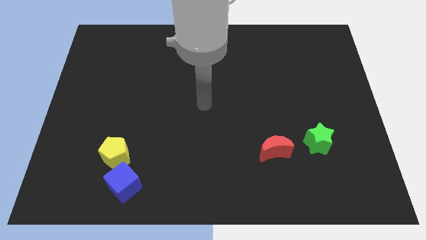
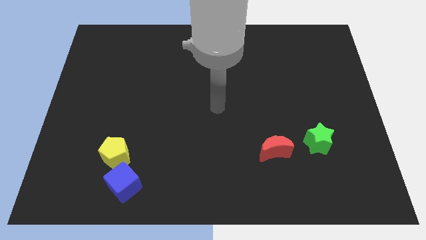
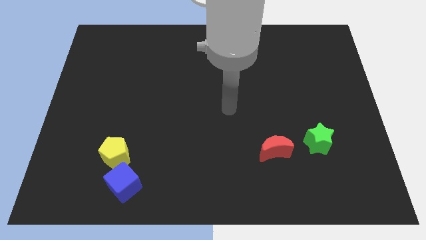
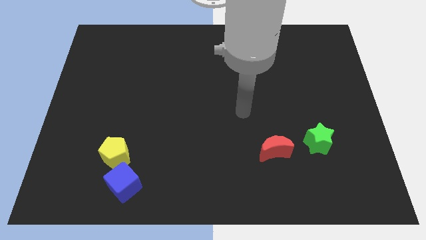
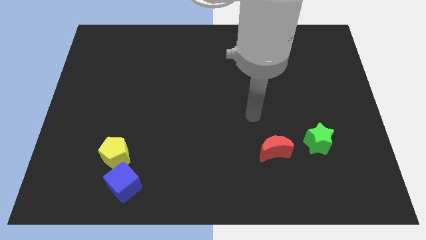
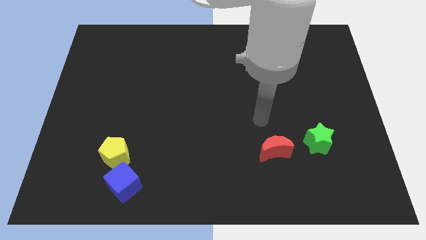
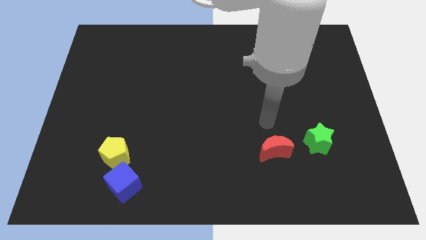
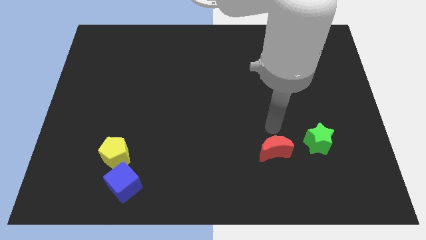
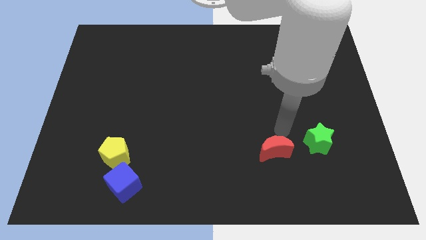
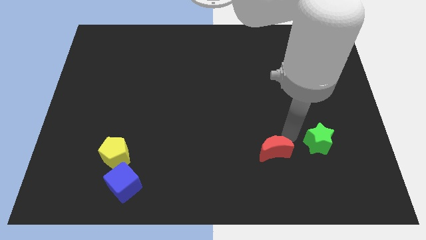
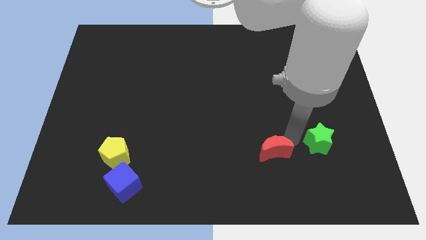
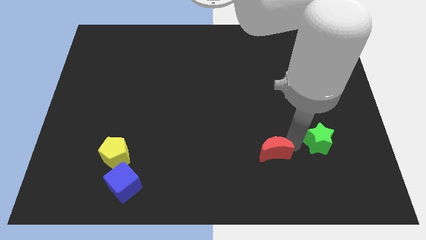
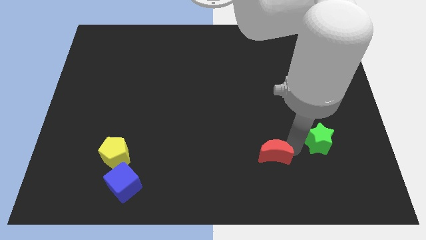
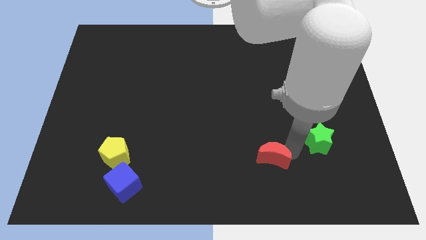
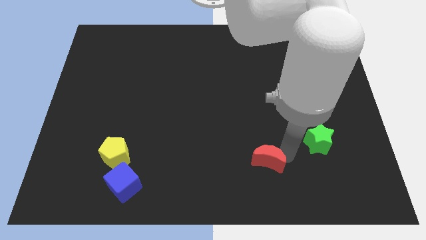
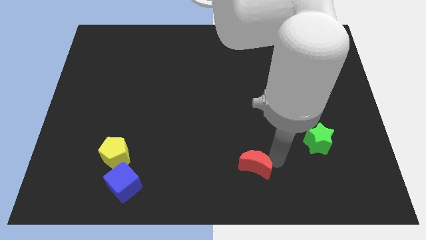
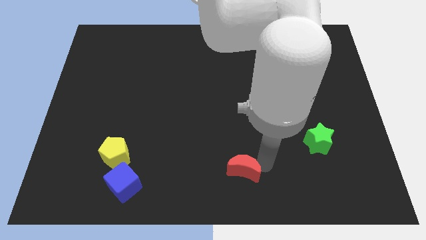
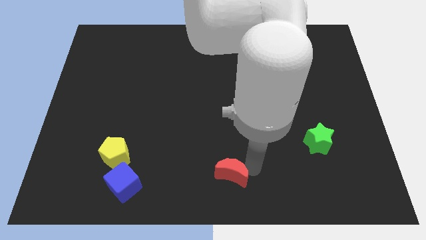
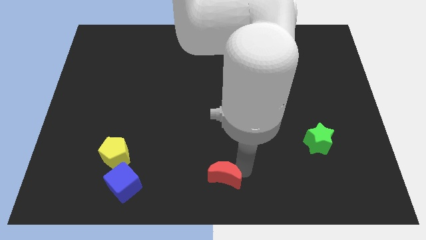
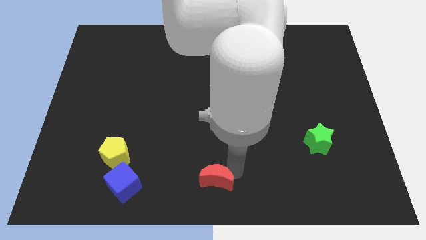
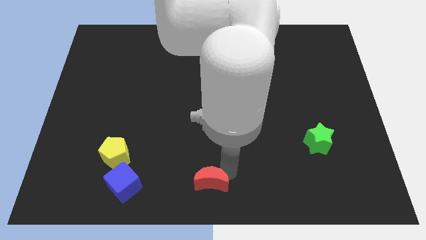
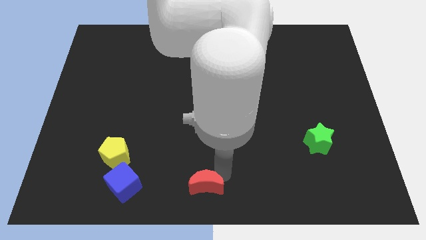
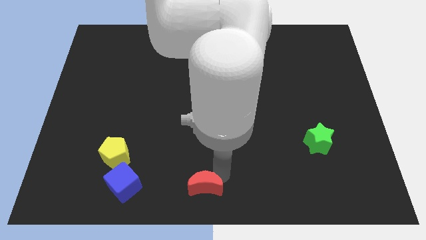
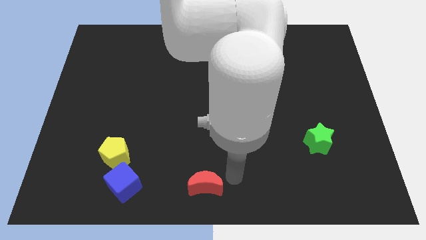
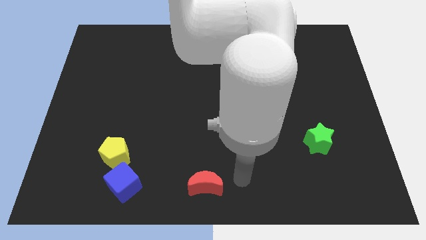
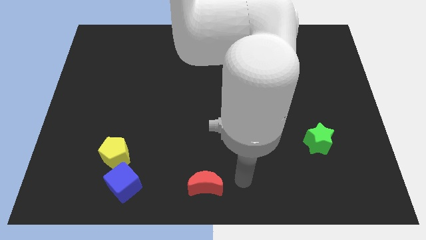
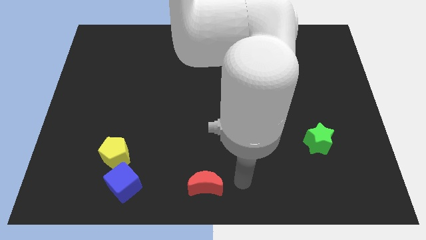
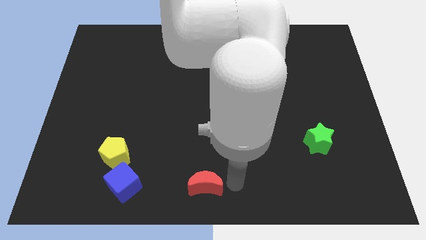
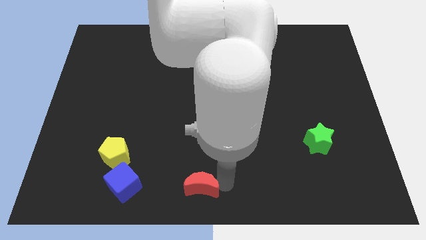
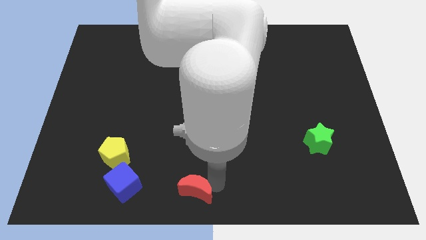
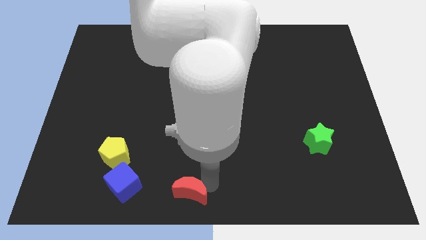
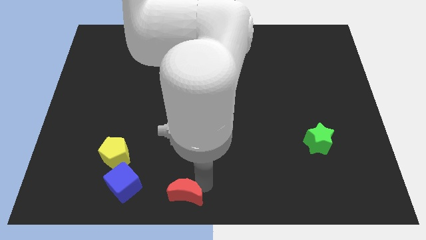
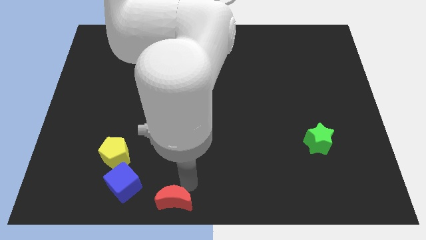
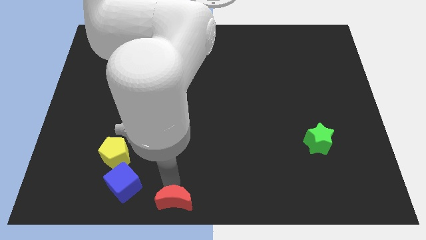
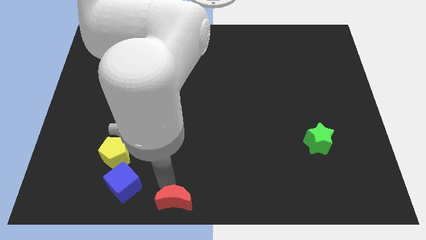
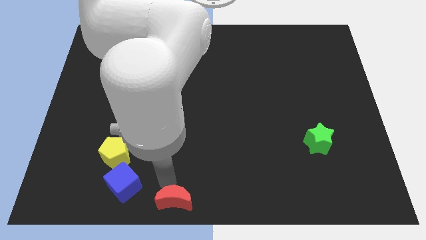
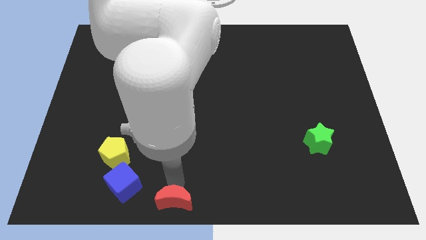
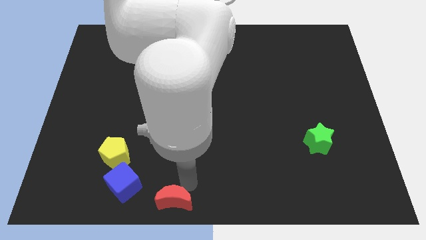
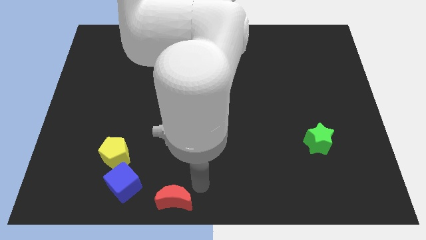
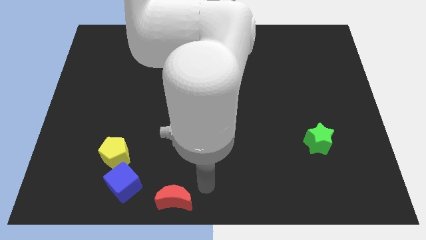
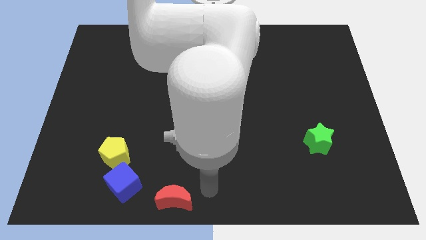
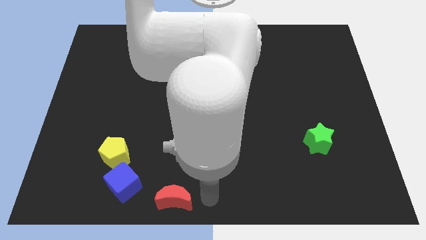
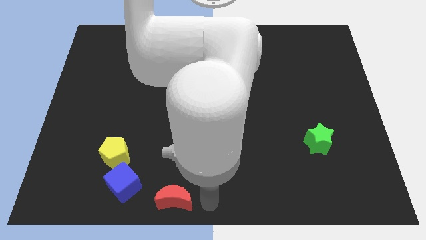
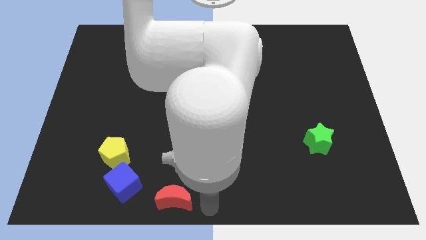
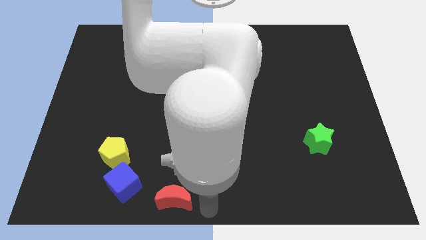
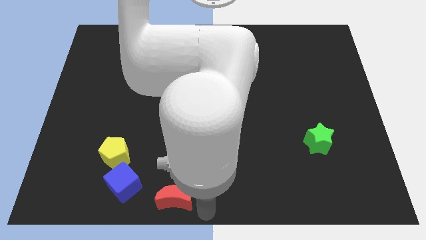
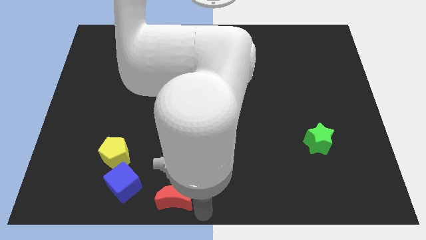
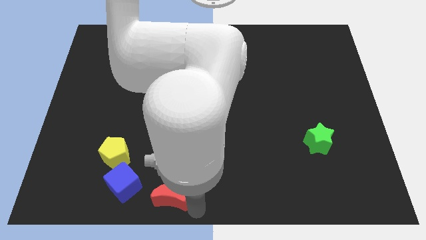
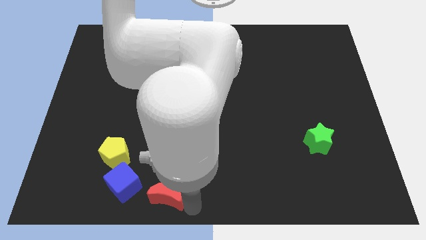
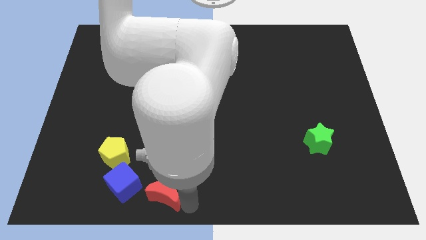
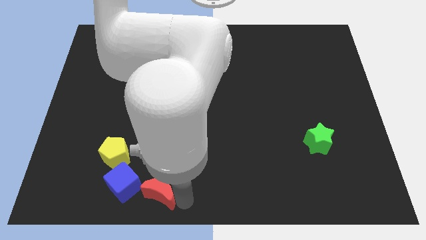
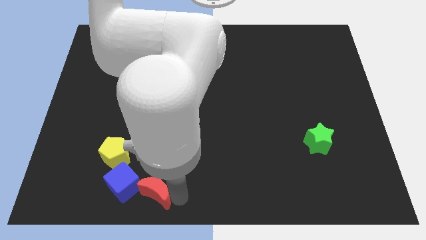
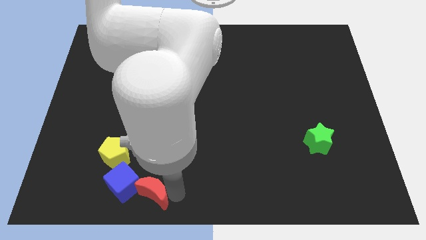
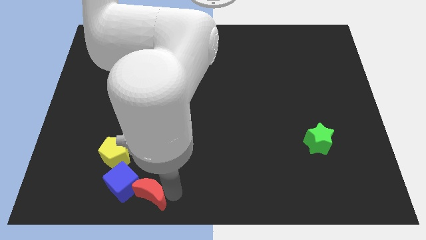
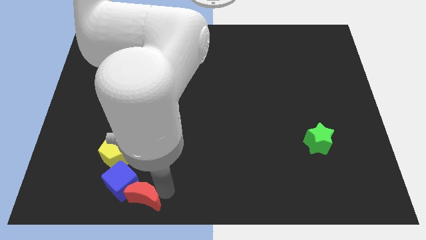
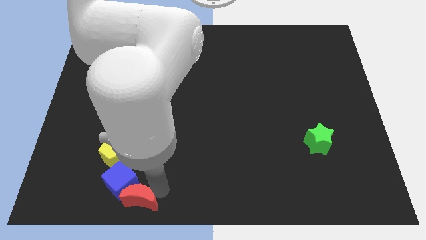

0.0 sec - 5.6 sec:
put the moon close to the blue cube

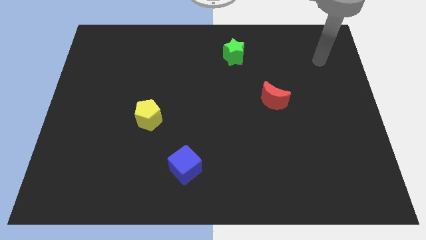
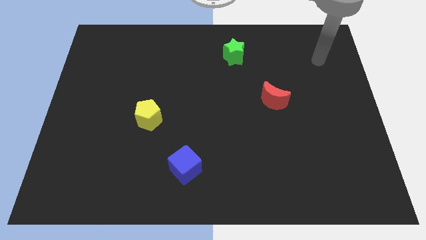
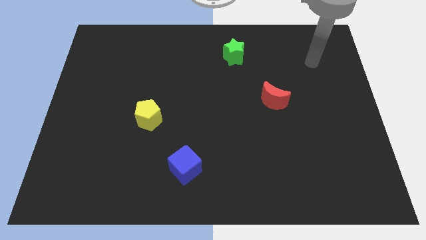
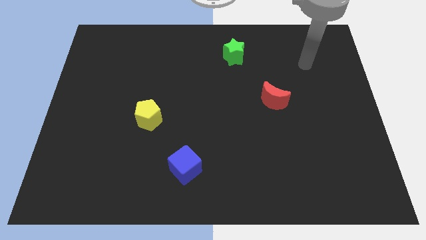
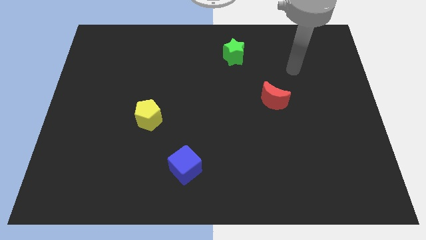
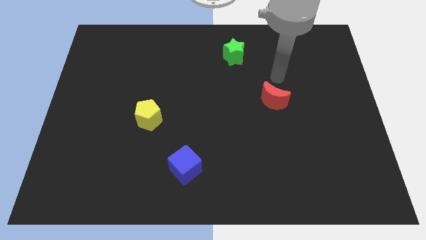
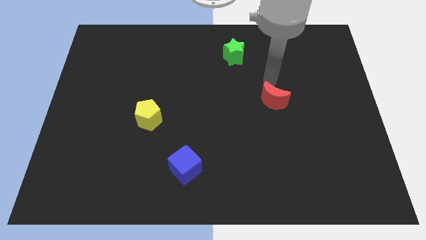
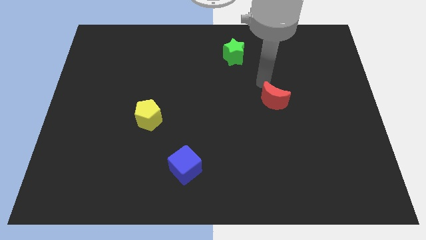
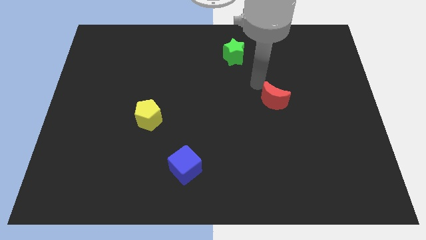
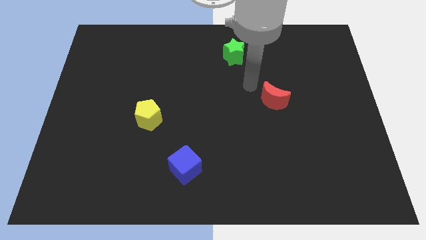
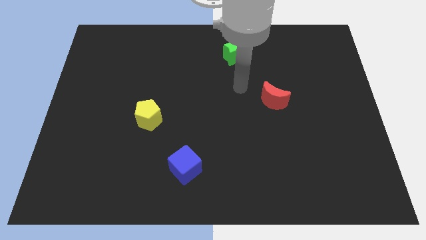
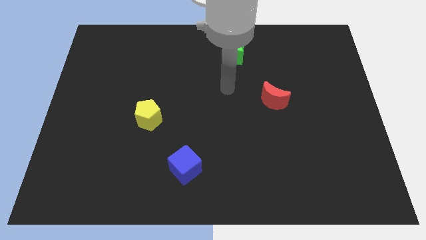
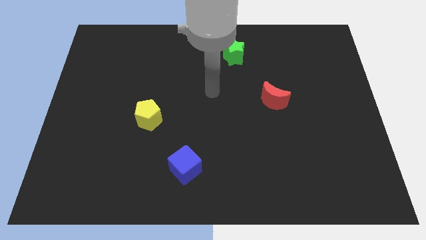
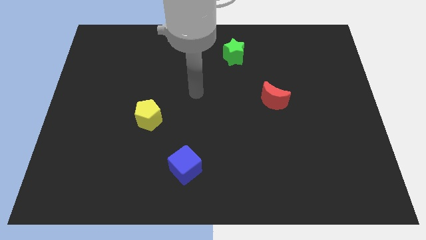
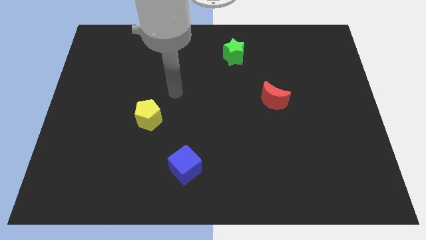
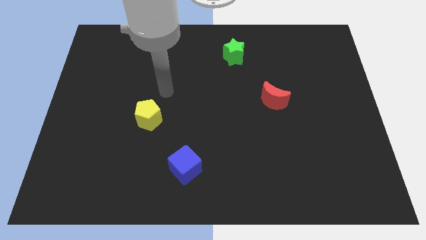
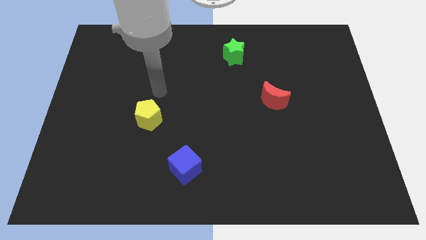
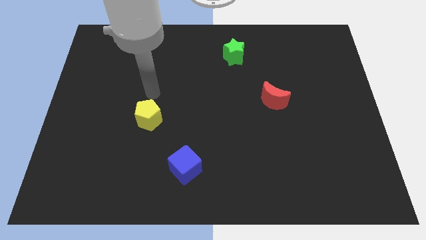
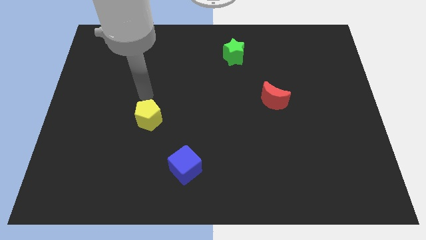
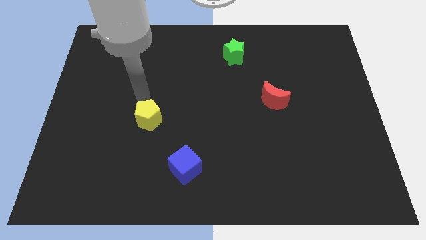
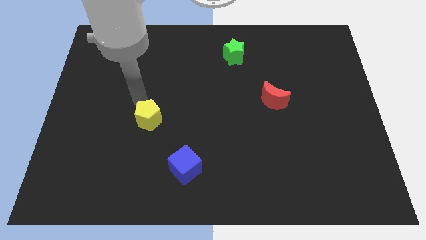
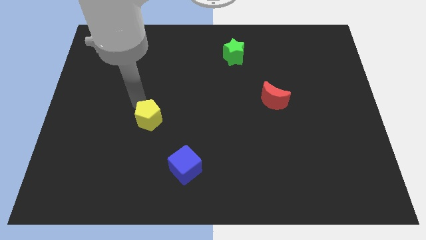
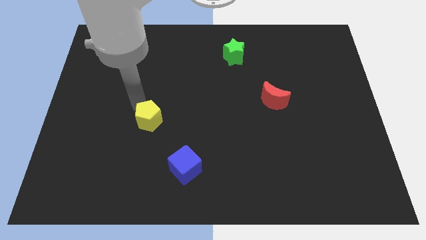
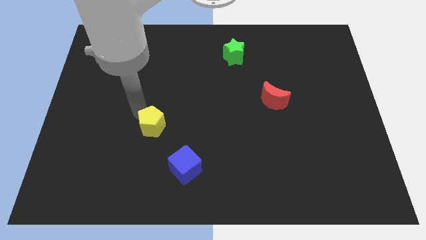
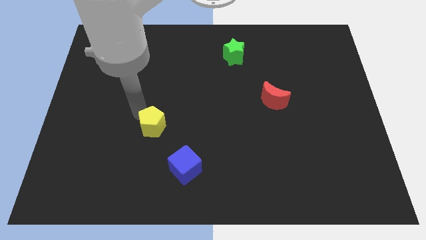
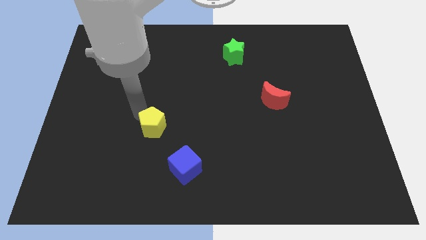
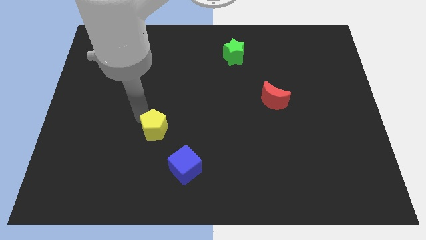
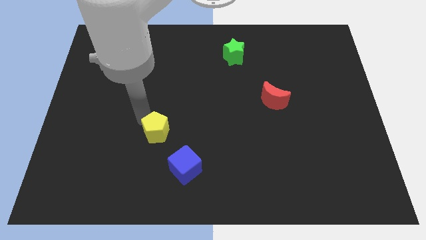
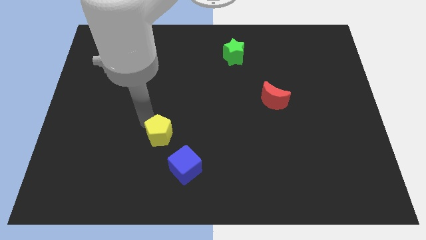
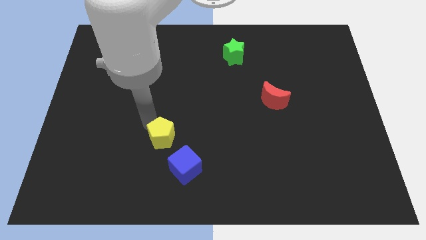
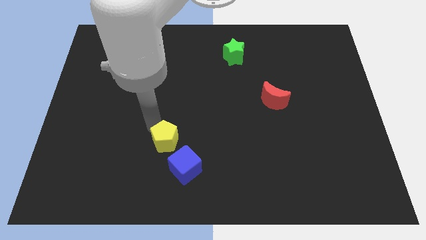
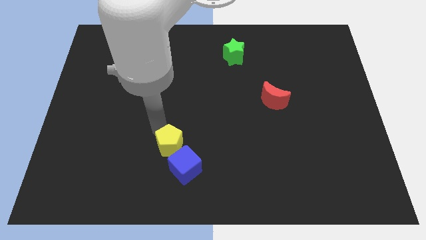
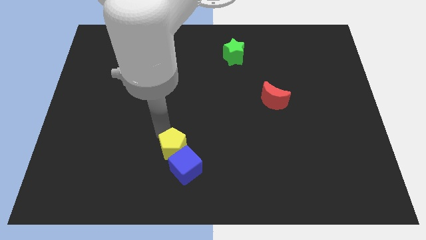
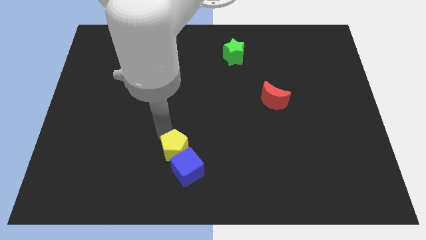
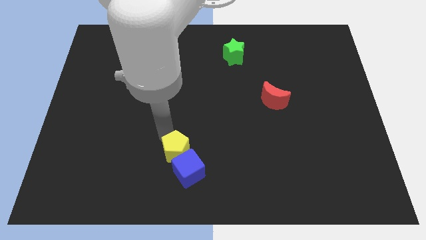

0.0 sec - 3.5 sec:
push the yellow block next to the blue cube
